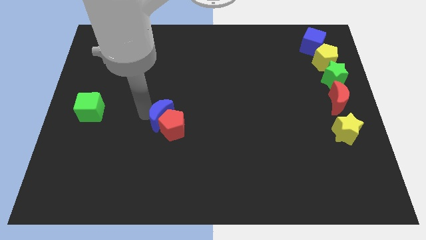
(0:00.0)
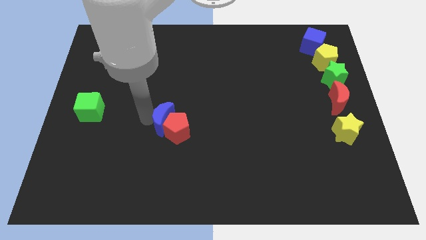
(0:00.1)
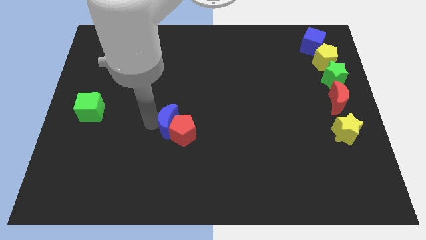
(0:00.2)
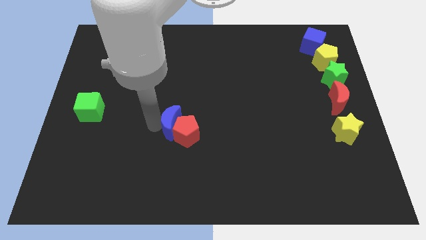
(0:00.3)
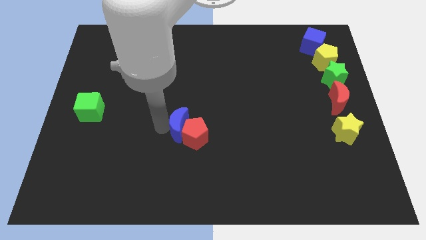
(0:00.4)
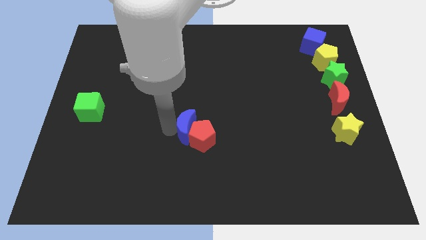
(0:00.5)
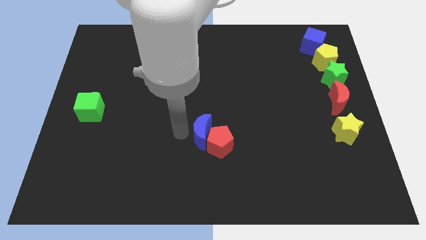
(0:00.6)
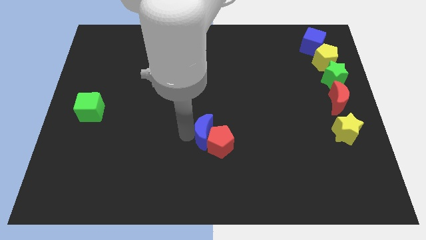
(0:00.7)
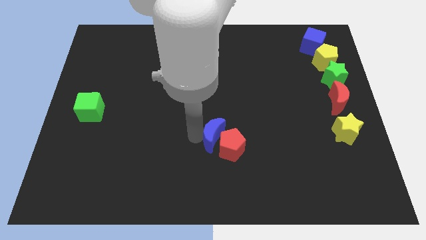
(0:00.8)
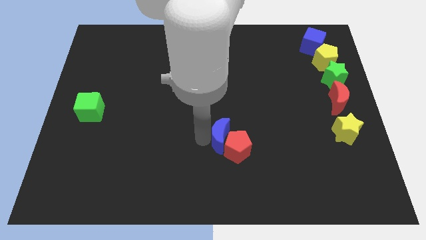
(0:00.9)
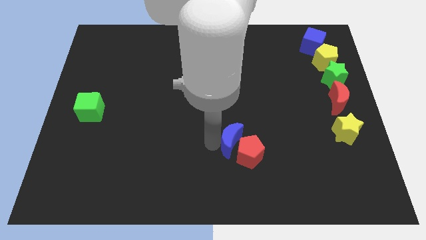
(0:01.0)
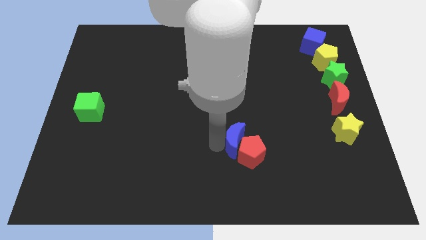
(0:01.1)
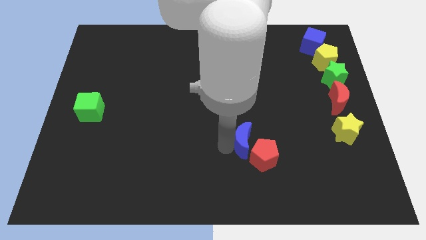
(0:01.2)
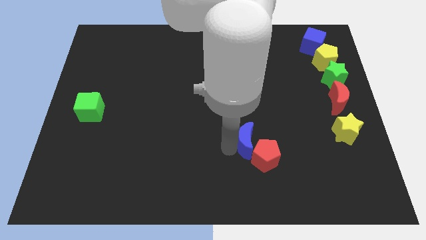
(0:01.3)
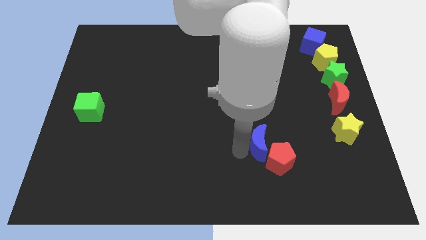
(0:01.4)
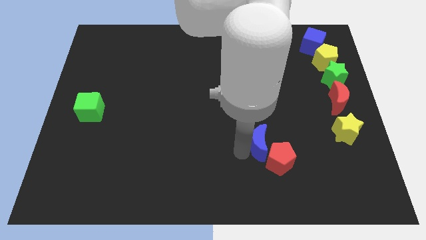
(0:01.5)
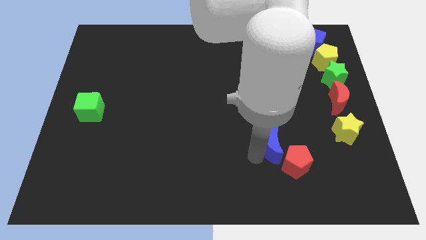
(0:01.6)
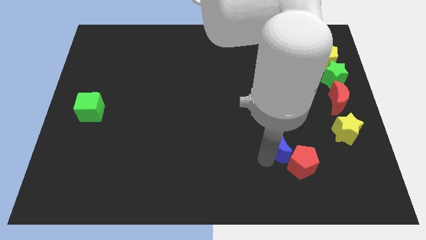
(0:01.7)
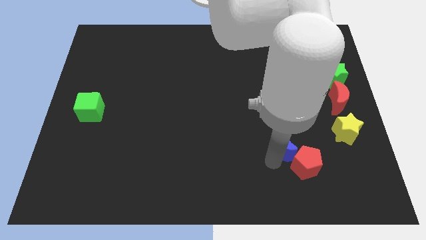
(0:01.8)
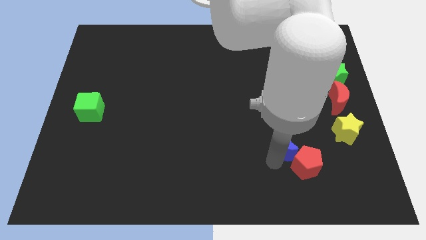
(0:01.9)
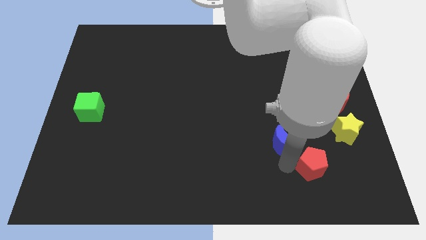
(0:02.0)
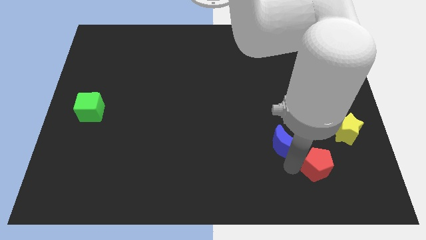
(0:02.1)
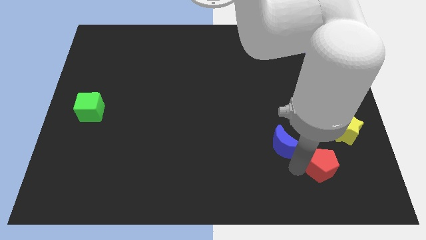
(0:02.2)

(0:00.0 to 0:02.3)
point your arm between blue moon and red pentagon

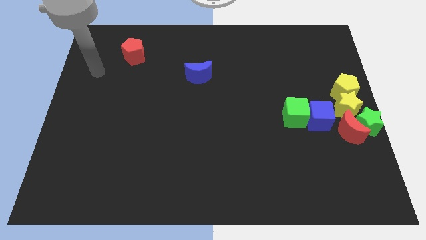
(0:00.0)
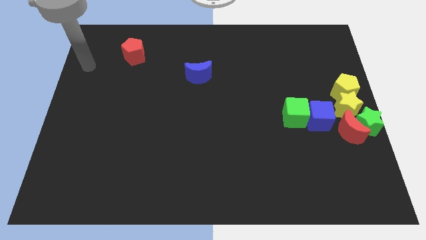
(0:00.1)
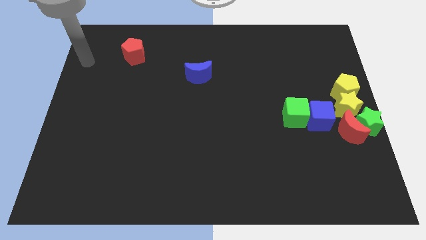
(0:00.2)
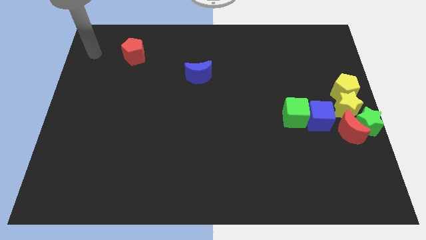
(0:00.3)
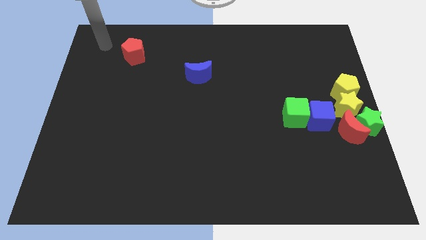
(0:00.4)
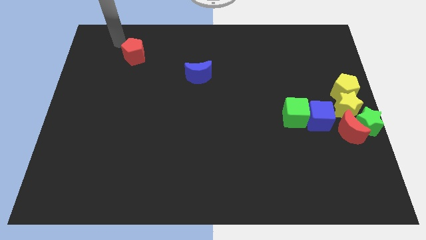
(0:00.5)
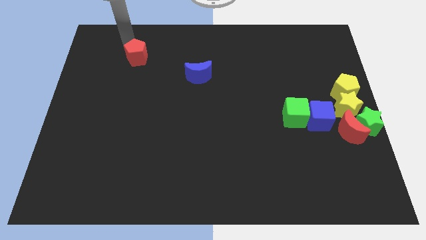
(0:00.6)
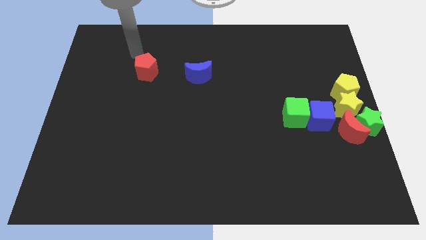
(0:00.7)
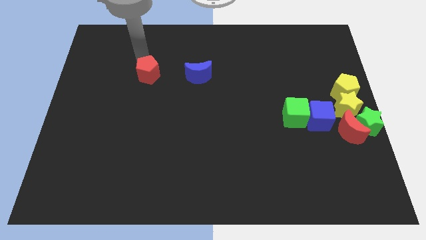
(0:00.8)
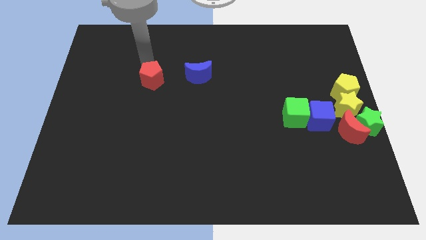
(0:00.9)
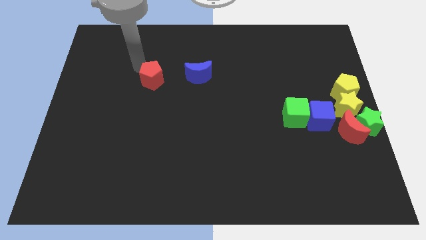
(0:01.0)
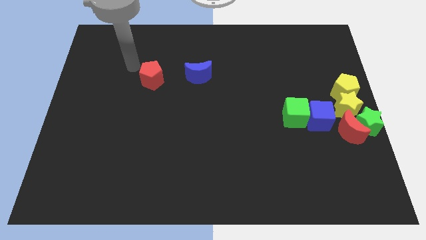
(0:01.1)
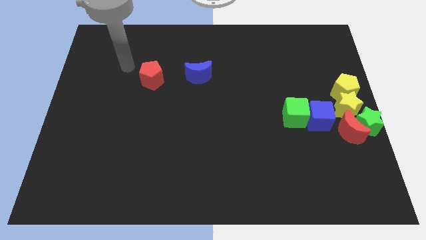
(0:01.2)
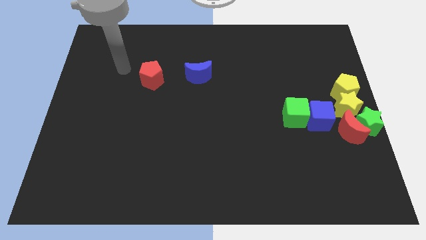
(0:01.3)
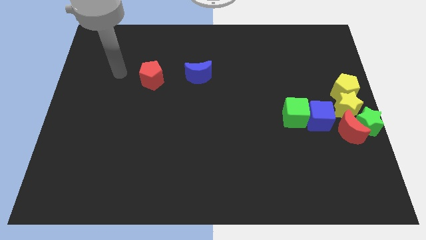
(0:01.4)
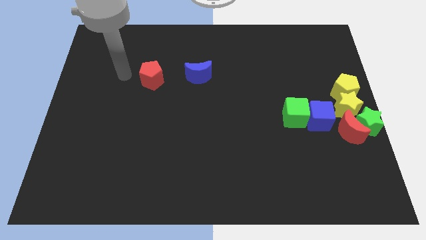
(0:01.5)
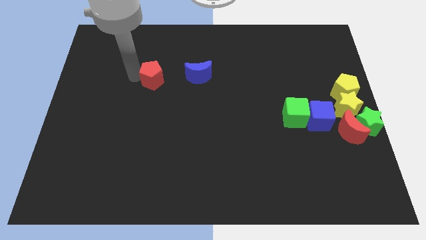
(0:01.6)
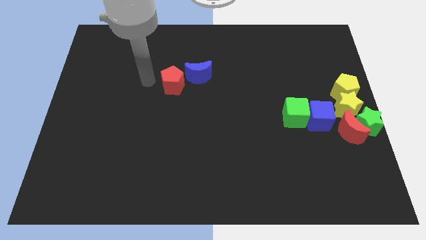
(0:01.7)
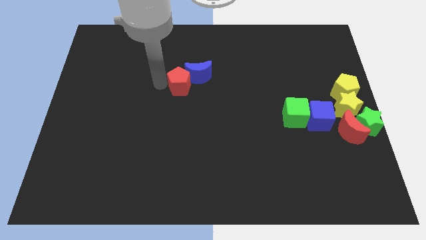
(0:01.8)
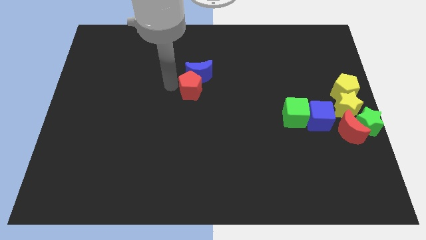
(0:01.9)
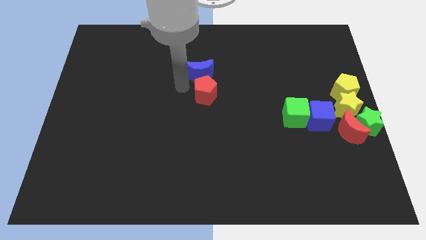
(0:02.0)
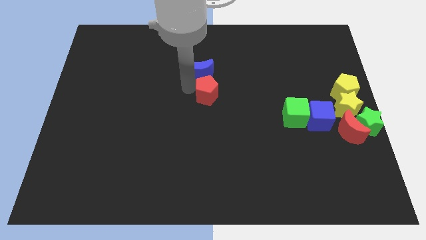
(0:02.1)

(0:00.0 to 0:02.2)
push the red pentagon below the blue crescent

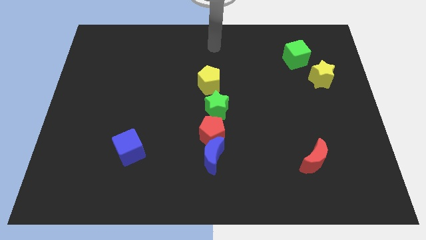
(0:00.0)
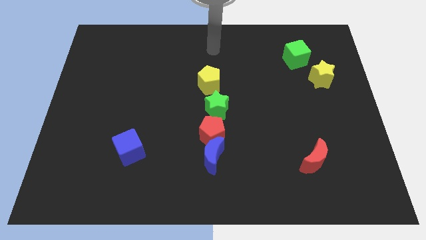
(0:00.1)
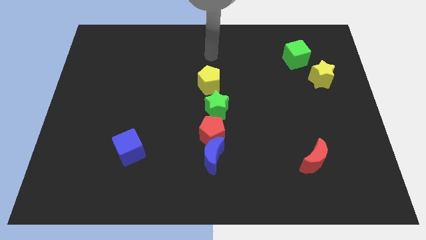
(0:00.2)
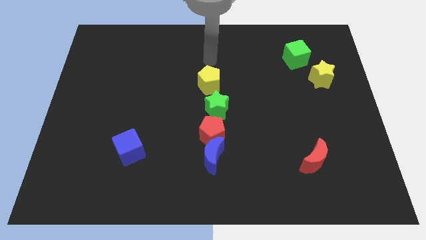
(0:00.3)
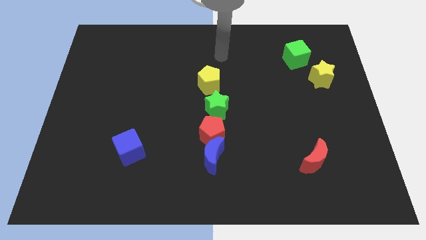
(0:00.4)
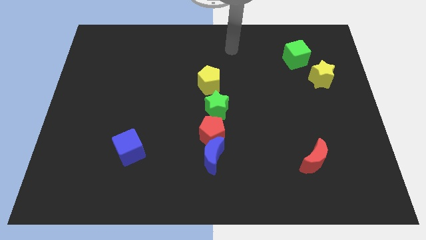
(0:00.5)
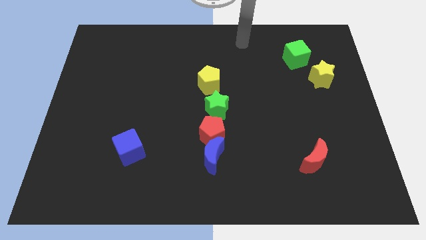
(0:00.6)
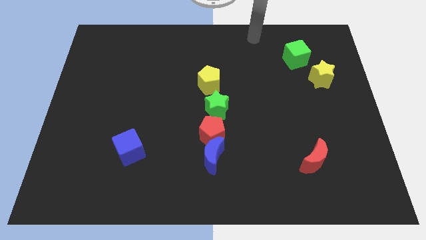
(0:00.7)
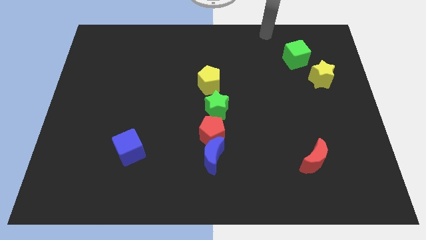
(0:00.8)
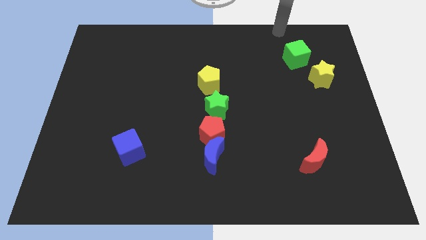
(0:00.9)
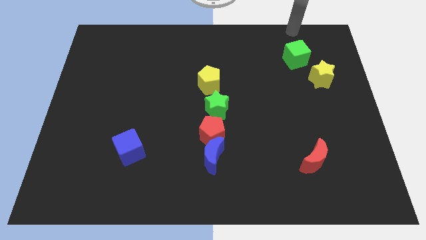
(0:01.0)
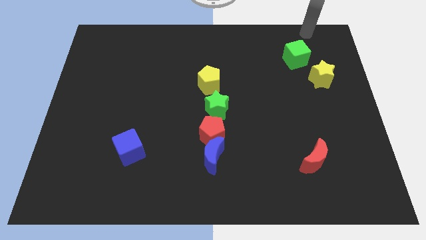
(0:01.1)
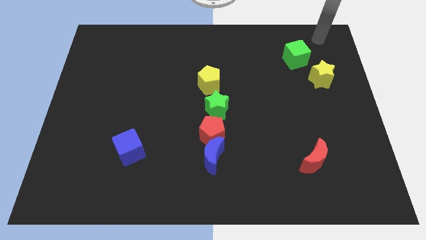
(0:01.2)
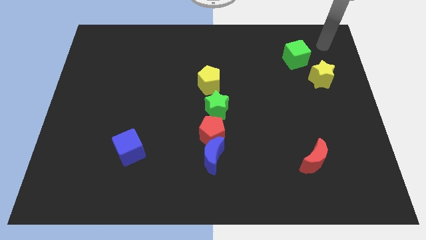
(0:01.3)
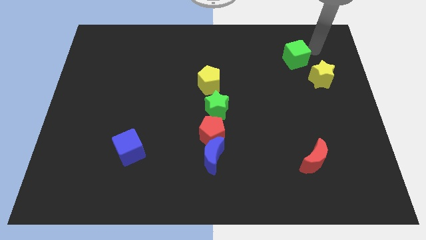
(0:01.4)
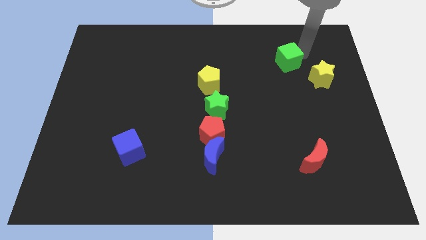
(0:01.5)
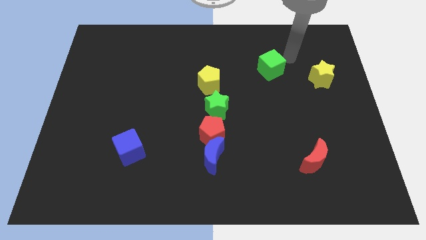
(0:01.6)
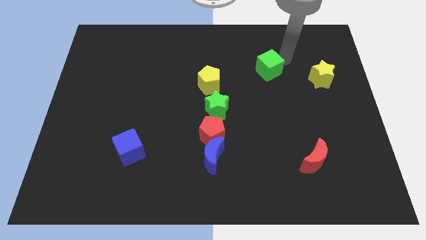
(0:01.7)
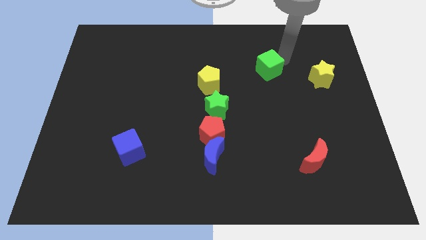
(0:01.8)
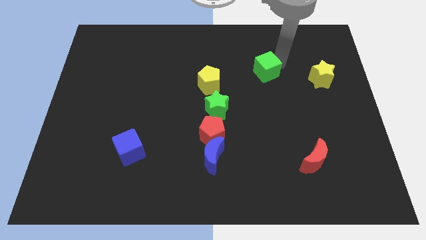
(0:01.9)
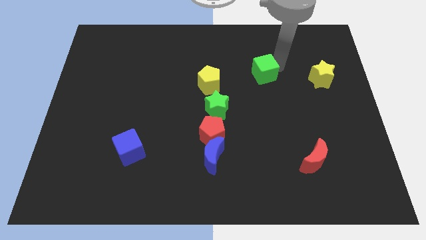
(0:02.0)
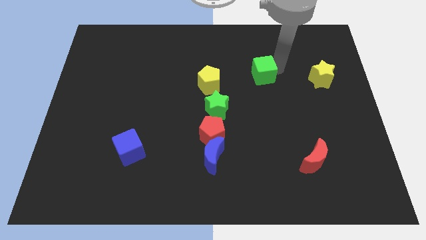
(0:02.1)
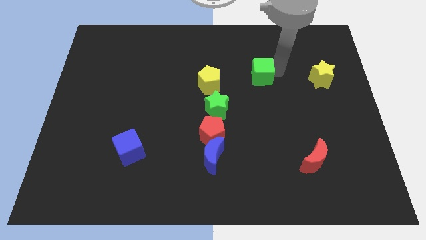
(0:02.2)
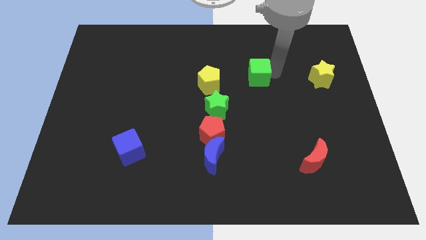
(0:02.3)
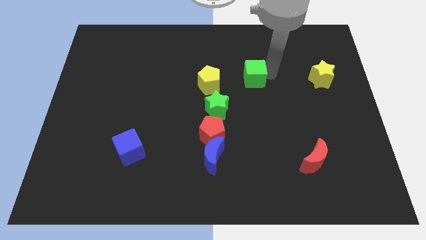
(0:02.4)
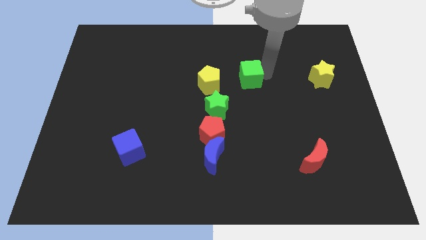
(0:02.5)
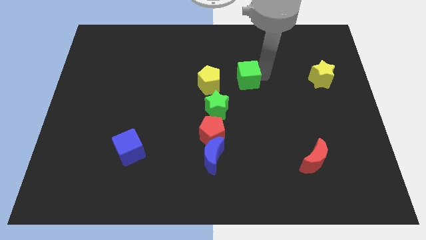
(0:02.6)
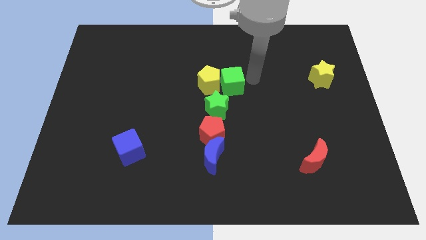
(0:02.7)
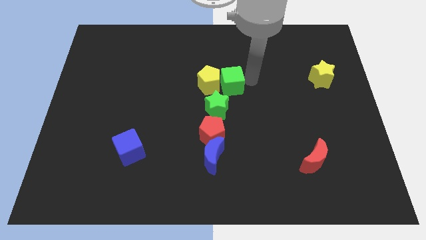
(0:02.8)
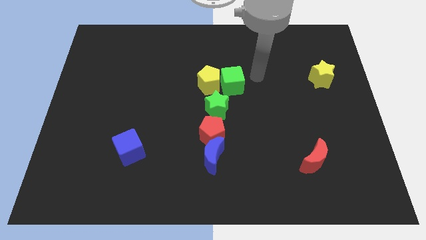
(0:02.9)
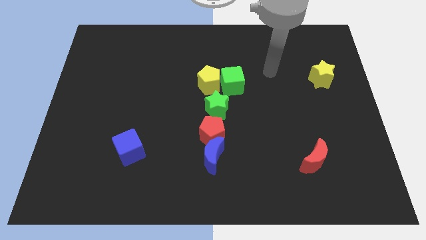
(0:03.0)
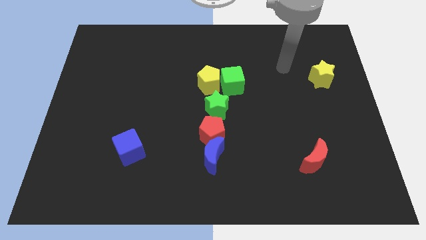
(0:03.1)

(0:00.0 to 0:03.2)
place green star adjacent to yellow pentagon

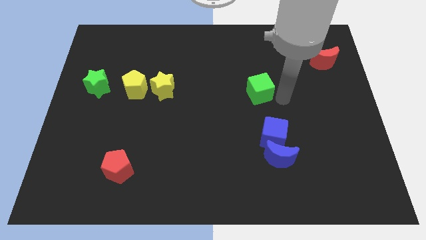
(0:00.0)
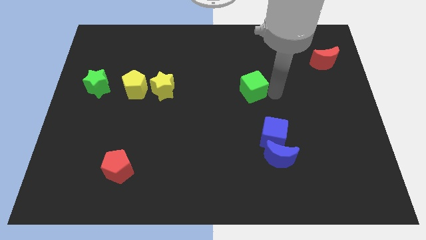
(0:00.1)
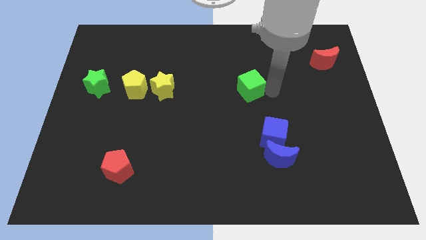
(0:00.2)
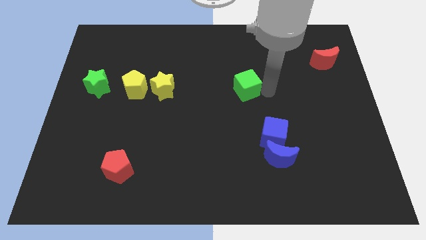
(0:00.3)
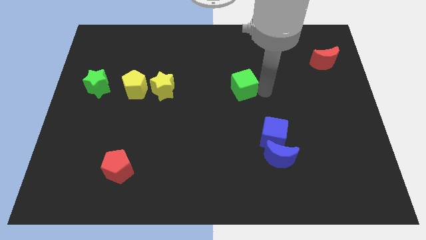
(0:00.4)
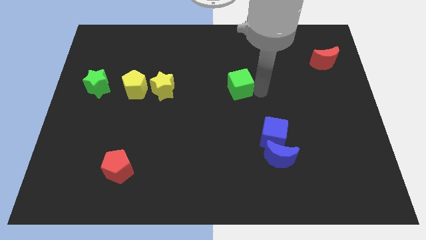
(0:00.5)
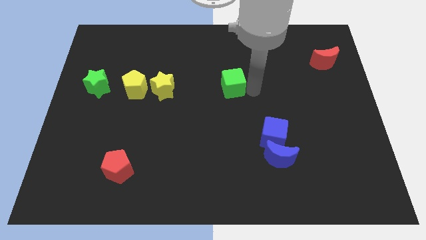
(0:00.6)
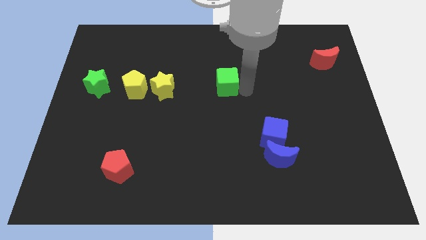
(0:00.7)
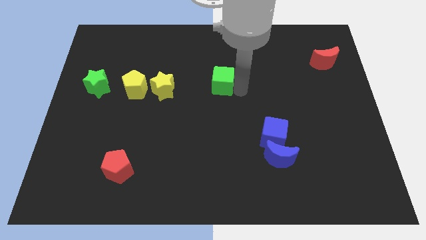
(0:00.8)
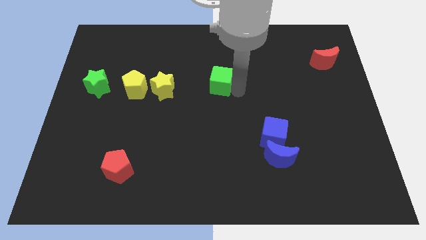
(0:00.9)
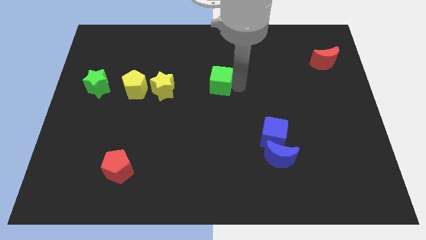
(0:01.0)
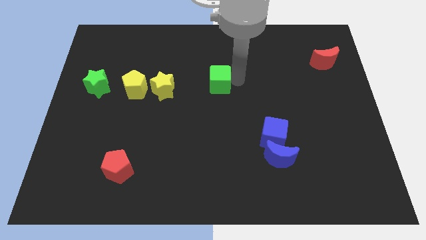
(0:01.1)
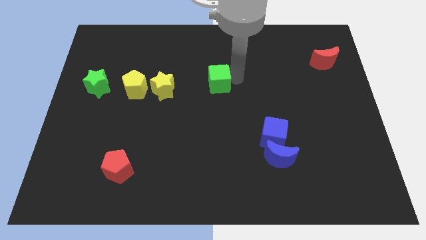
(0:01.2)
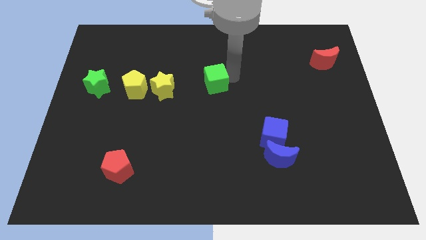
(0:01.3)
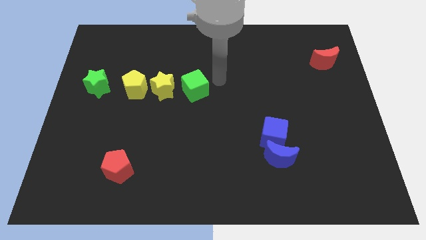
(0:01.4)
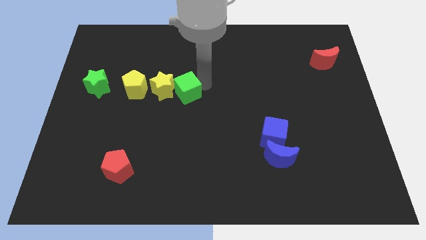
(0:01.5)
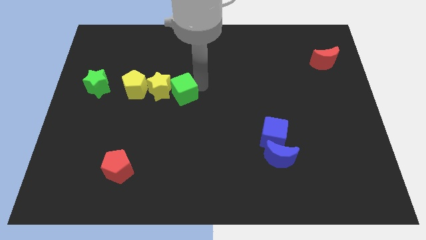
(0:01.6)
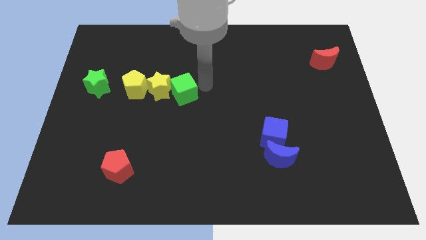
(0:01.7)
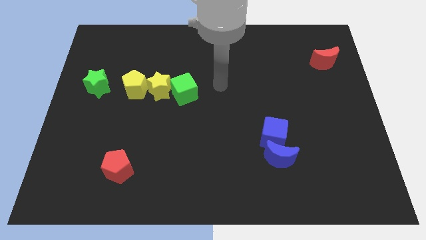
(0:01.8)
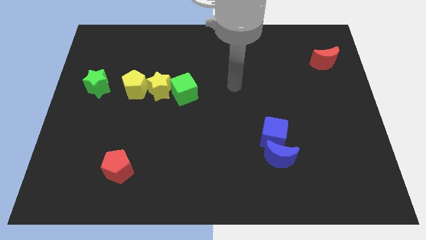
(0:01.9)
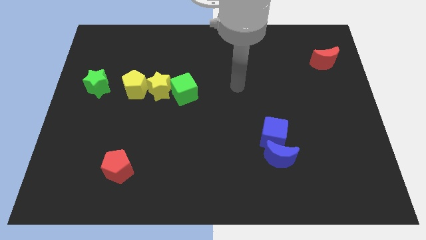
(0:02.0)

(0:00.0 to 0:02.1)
push the green cube close to the yellow star
